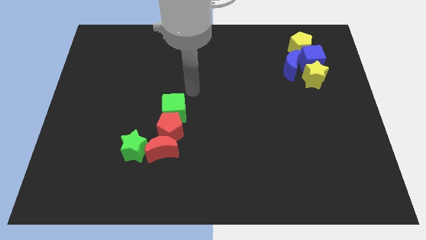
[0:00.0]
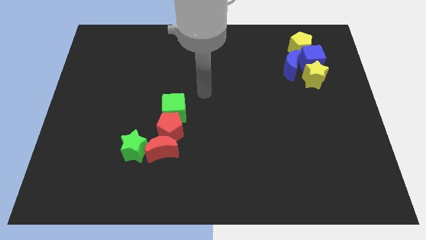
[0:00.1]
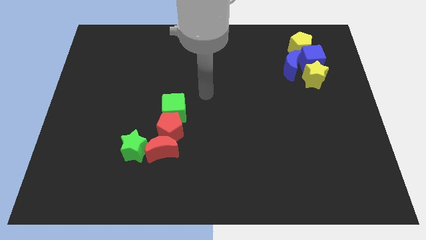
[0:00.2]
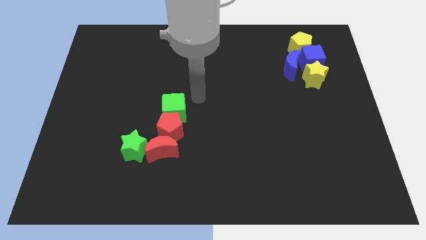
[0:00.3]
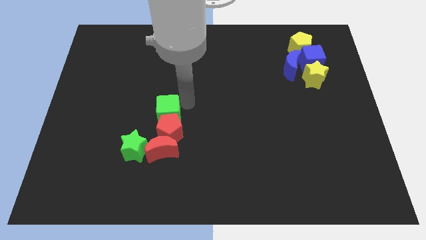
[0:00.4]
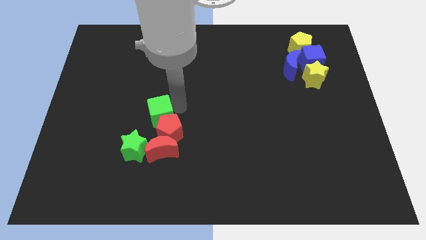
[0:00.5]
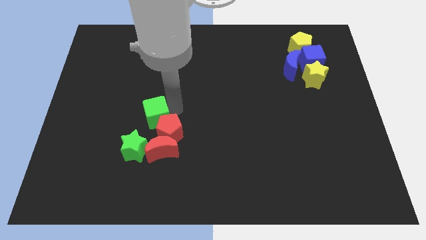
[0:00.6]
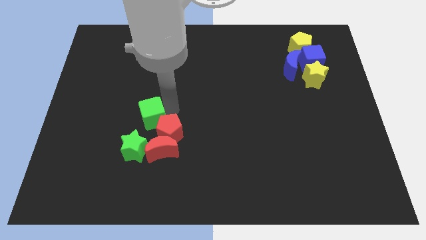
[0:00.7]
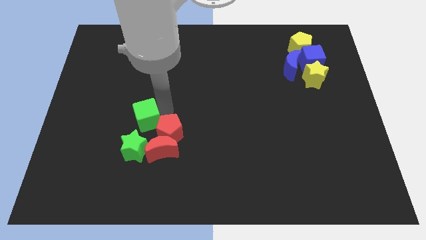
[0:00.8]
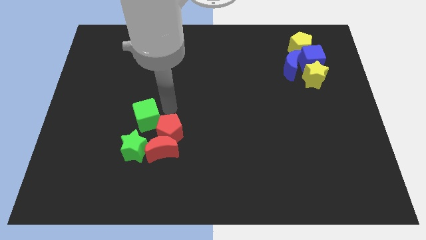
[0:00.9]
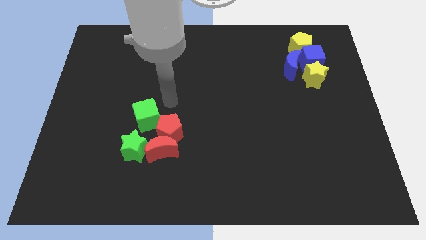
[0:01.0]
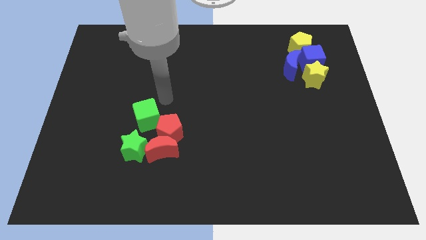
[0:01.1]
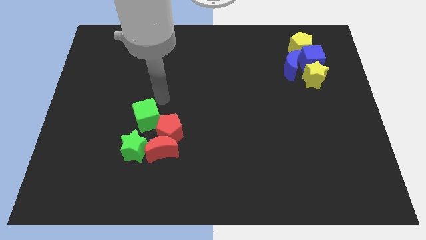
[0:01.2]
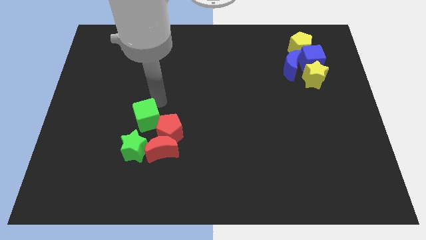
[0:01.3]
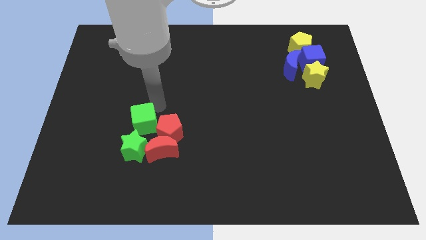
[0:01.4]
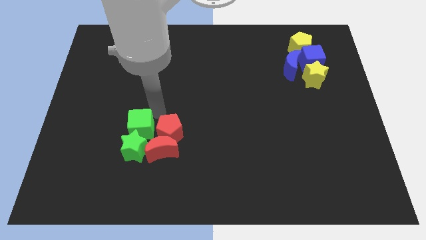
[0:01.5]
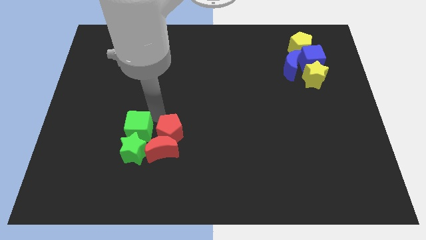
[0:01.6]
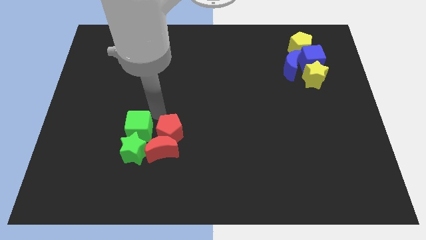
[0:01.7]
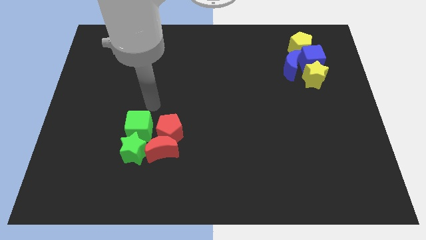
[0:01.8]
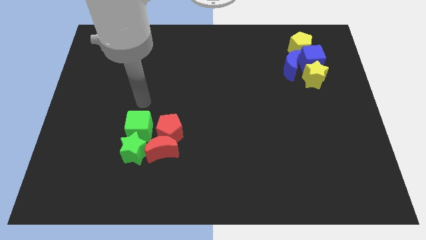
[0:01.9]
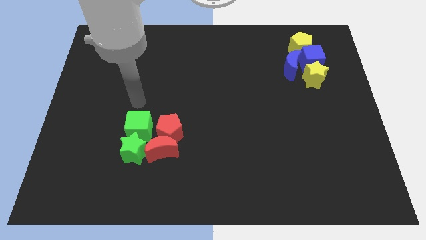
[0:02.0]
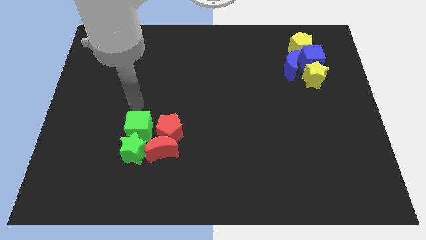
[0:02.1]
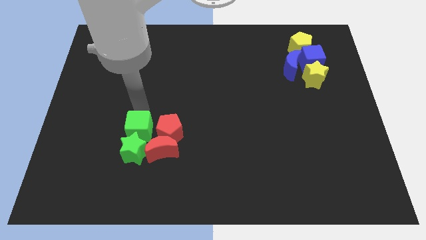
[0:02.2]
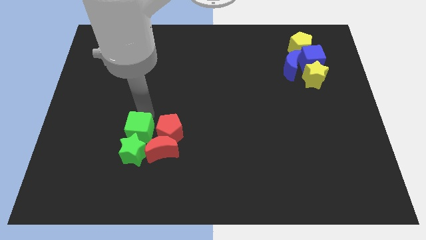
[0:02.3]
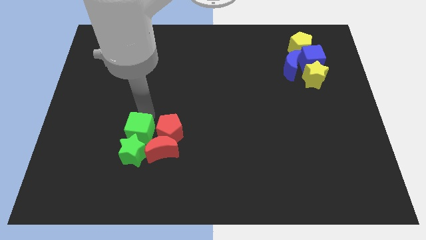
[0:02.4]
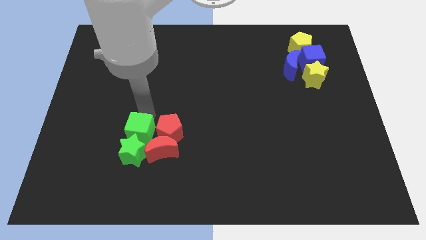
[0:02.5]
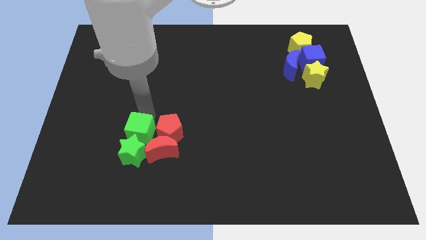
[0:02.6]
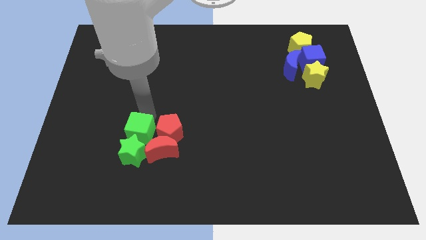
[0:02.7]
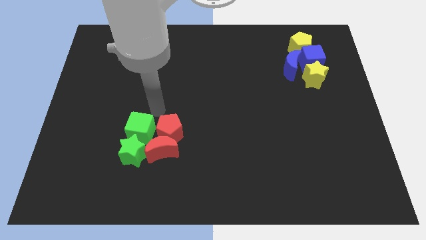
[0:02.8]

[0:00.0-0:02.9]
push the green cube to the top of the green star

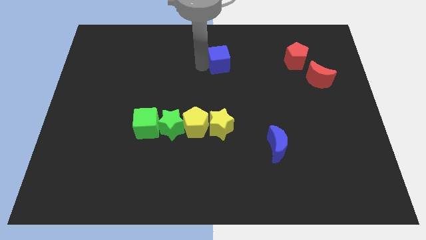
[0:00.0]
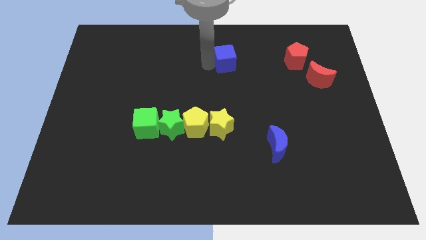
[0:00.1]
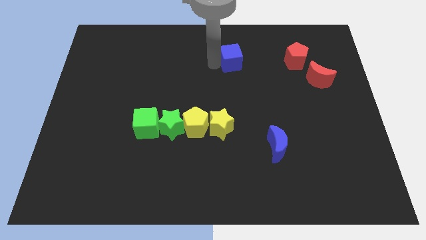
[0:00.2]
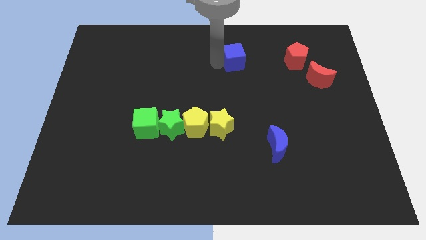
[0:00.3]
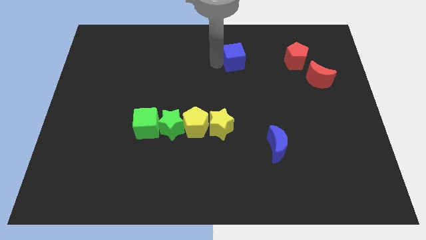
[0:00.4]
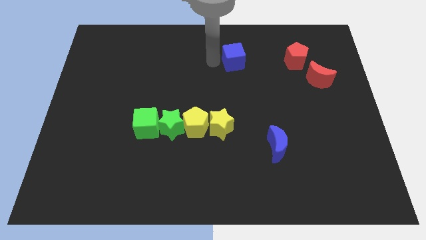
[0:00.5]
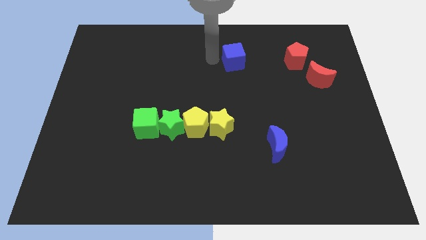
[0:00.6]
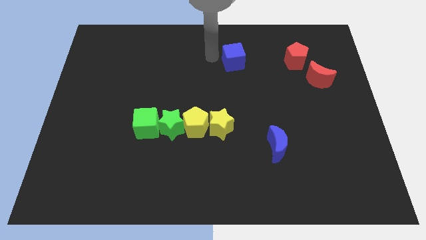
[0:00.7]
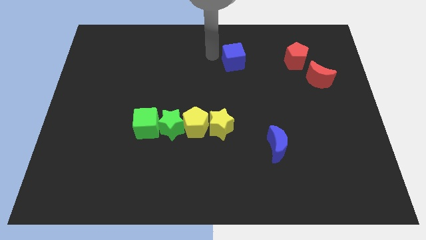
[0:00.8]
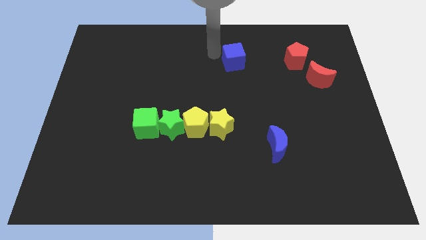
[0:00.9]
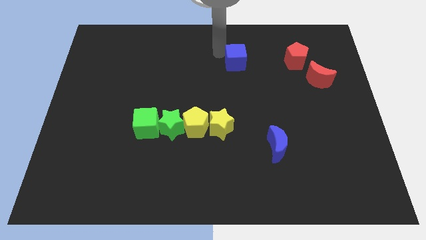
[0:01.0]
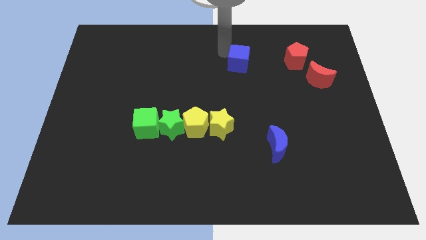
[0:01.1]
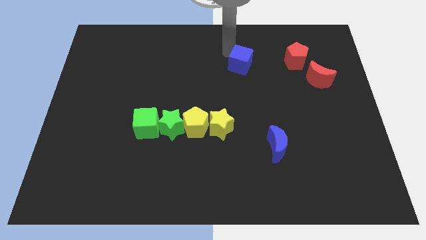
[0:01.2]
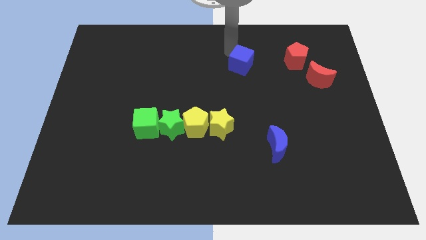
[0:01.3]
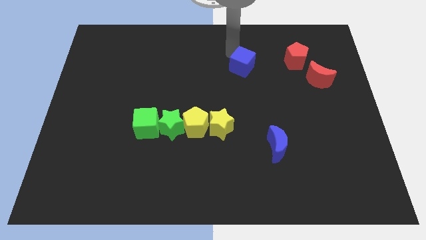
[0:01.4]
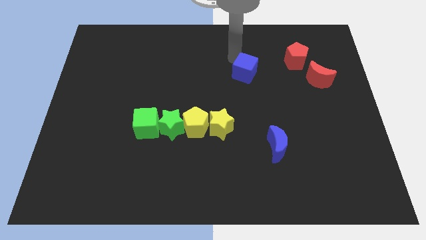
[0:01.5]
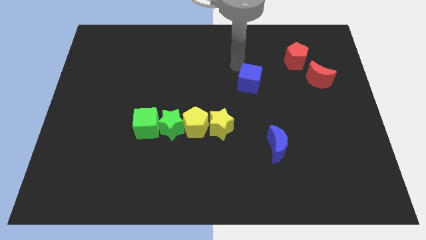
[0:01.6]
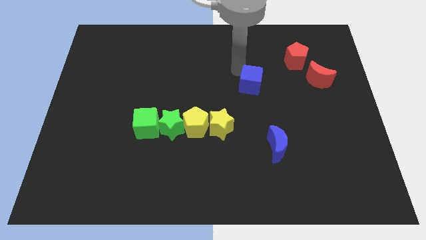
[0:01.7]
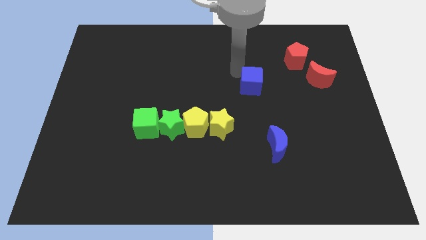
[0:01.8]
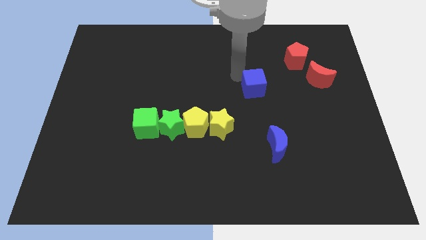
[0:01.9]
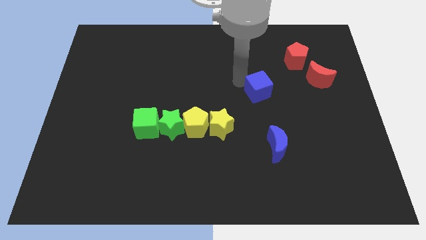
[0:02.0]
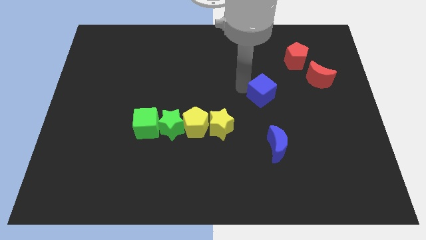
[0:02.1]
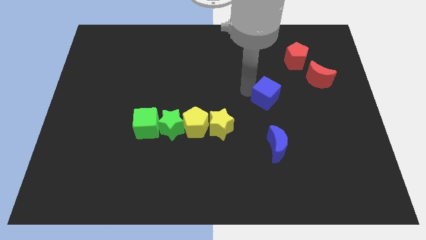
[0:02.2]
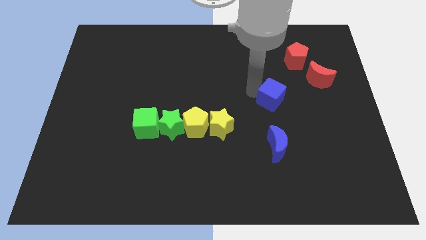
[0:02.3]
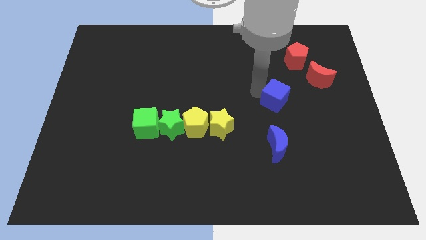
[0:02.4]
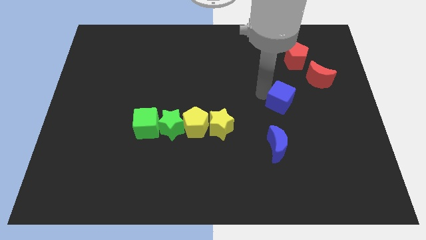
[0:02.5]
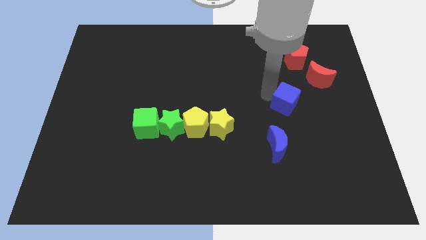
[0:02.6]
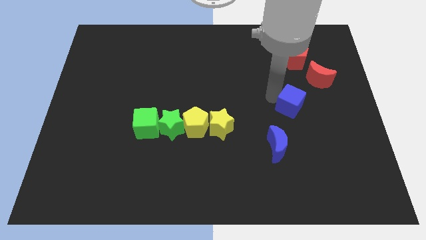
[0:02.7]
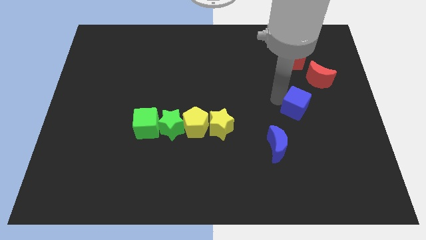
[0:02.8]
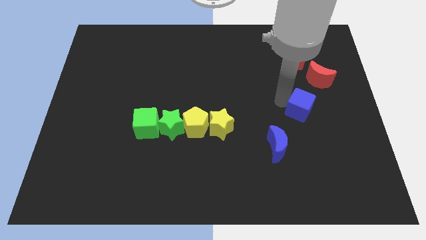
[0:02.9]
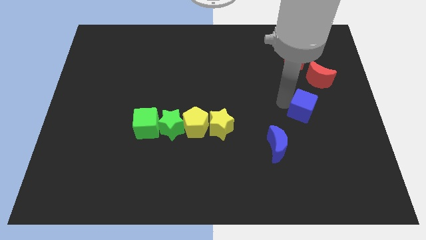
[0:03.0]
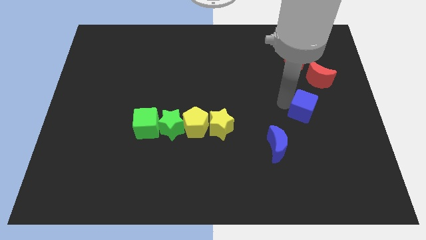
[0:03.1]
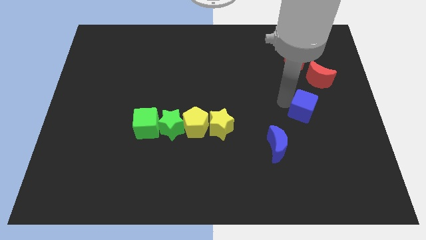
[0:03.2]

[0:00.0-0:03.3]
slide the blue cube diagonally top right to the blue moon

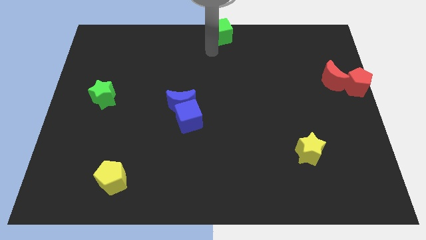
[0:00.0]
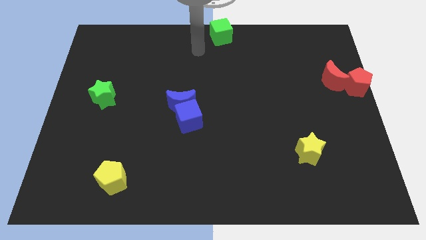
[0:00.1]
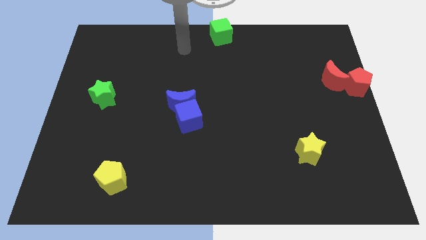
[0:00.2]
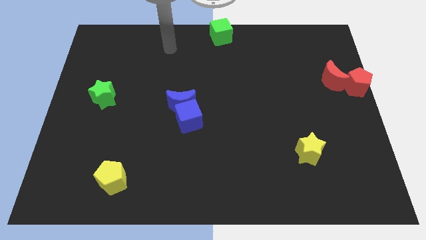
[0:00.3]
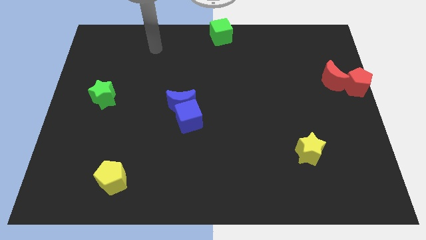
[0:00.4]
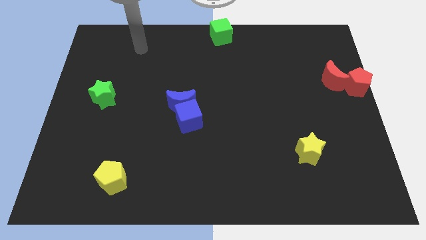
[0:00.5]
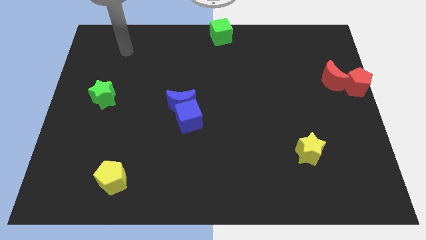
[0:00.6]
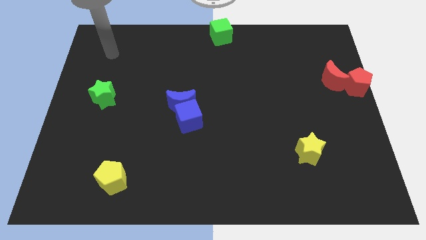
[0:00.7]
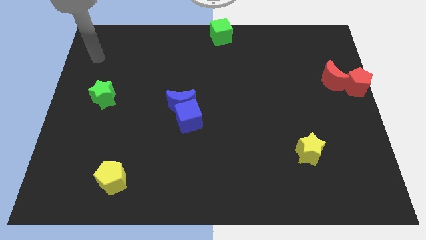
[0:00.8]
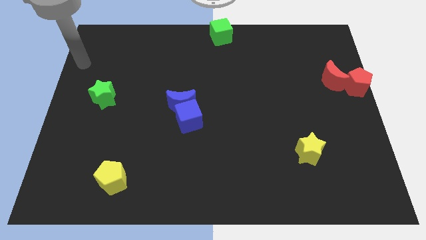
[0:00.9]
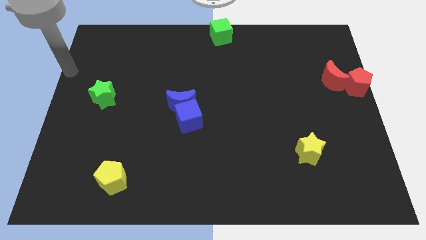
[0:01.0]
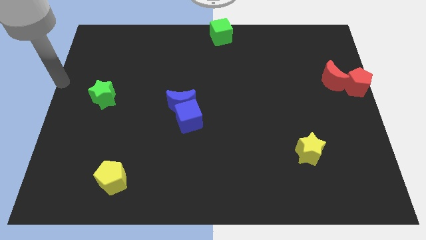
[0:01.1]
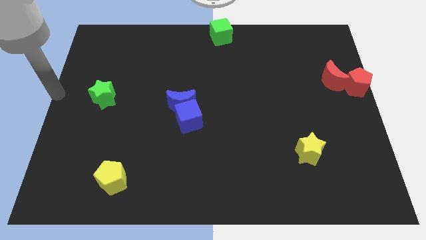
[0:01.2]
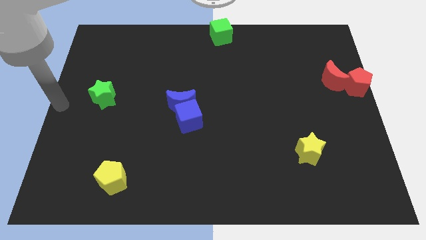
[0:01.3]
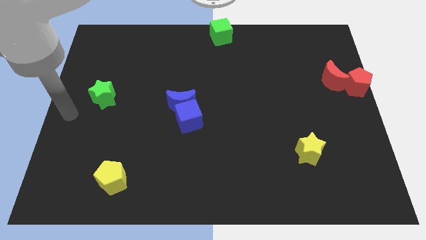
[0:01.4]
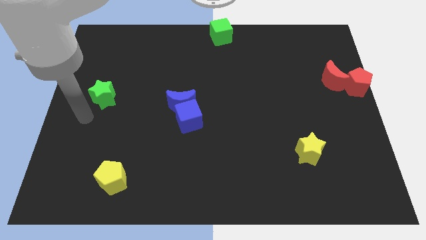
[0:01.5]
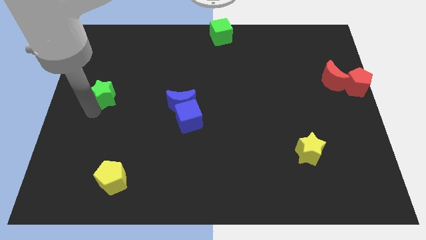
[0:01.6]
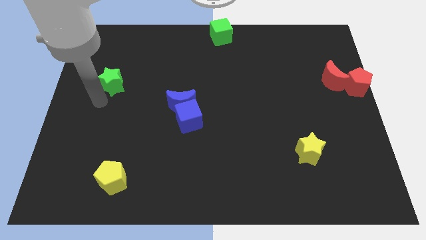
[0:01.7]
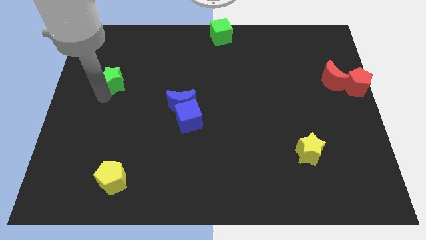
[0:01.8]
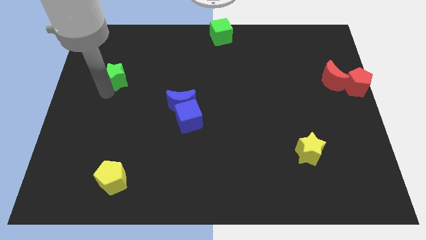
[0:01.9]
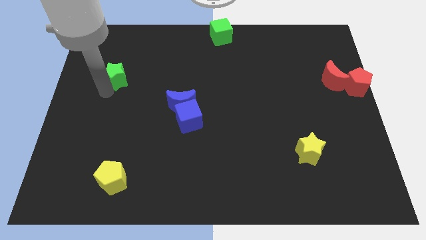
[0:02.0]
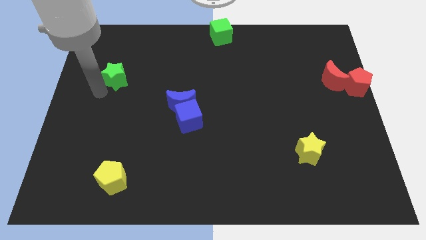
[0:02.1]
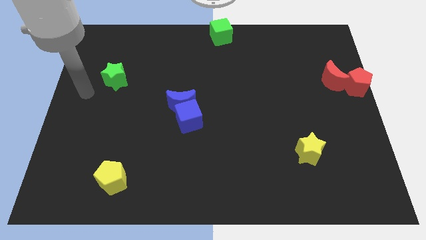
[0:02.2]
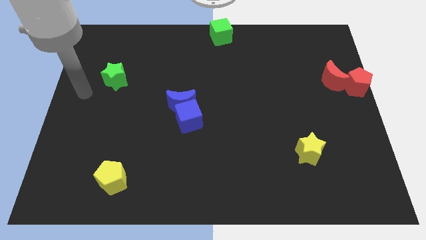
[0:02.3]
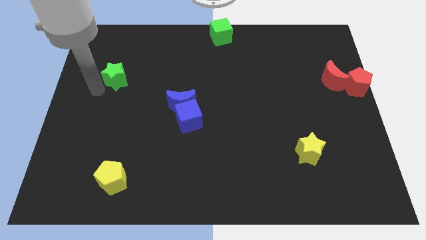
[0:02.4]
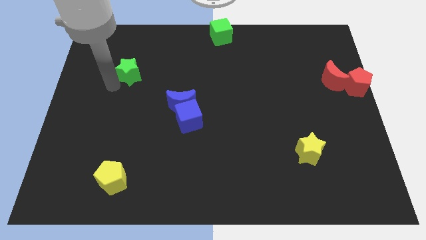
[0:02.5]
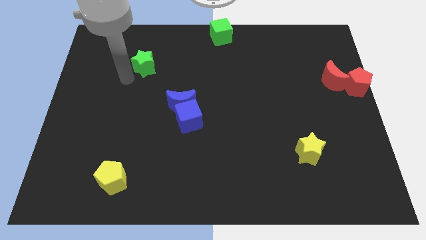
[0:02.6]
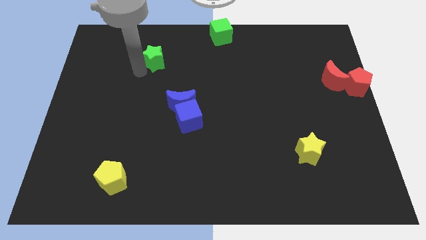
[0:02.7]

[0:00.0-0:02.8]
move the green star slightly to the top right
